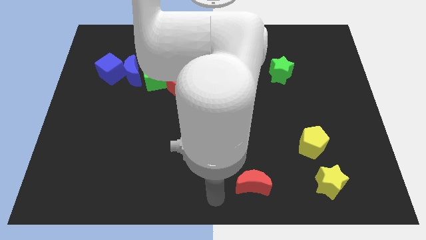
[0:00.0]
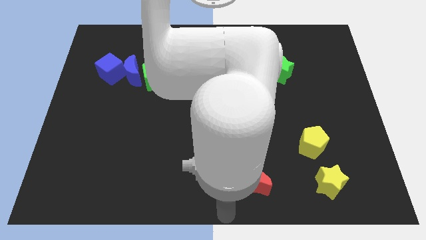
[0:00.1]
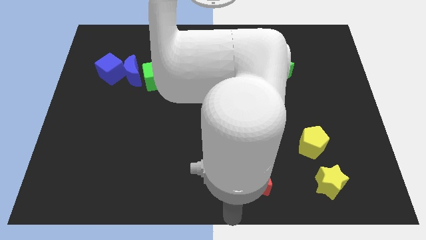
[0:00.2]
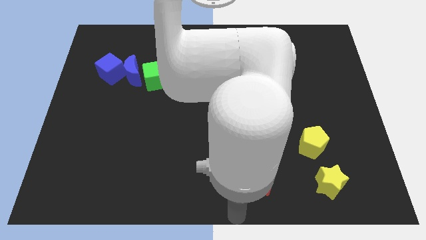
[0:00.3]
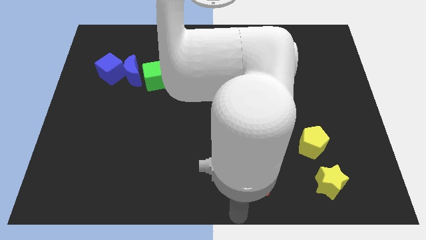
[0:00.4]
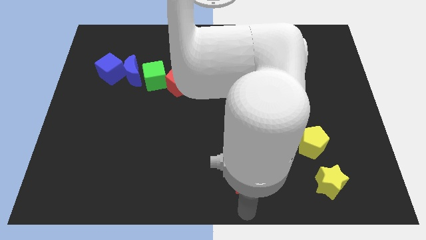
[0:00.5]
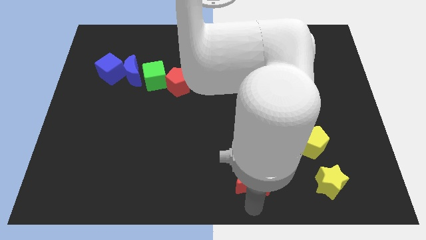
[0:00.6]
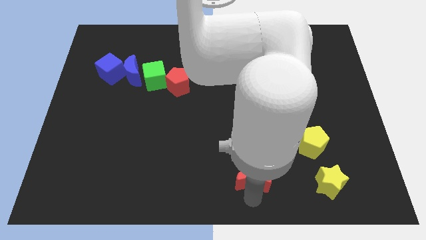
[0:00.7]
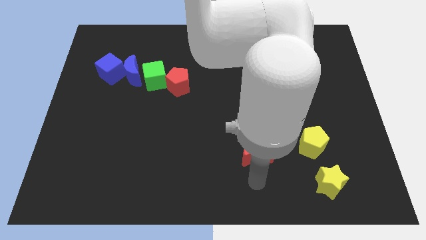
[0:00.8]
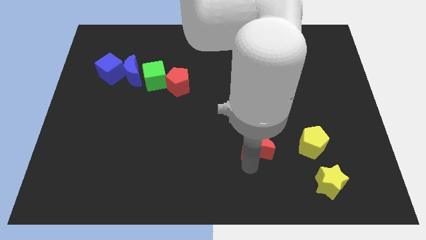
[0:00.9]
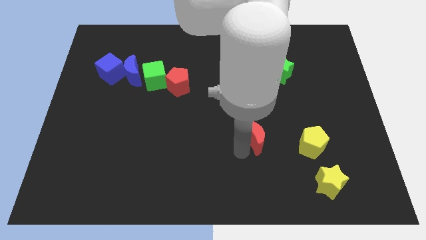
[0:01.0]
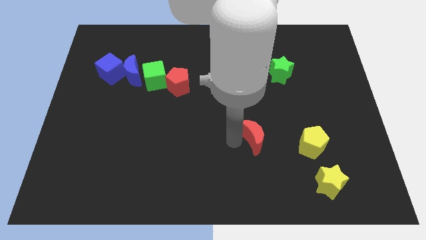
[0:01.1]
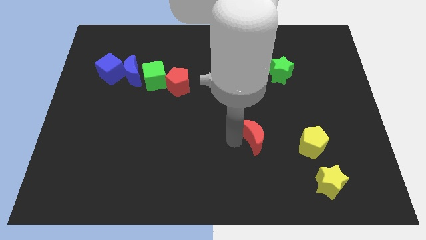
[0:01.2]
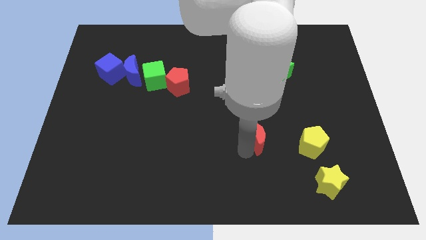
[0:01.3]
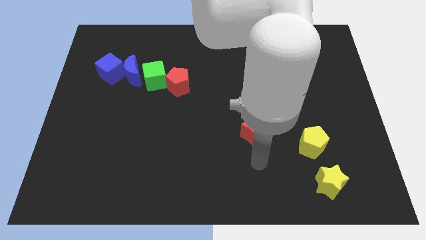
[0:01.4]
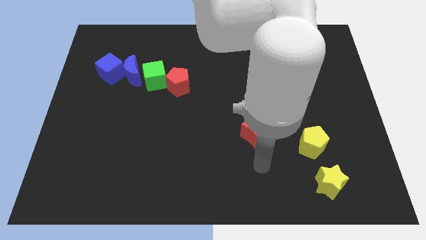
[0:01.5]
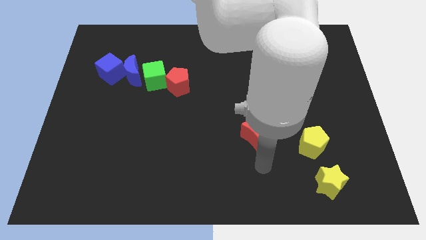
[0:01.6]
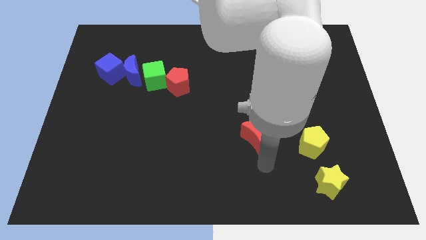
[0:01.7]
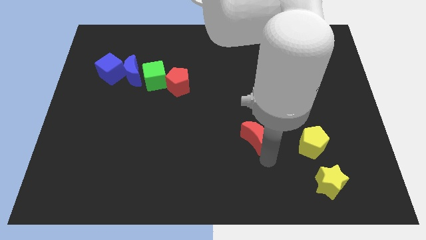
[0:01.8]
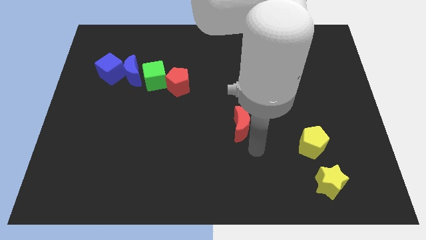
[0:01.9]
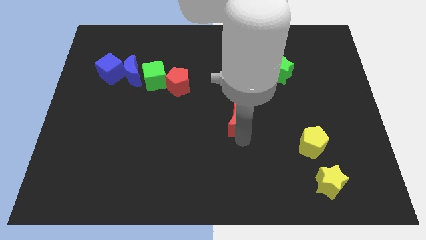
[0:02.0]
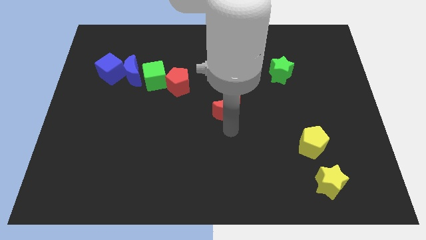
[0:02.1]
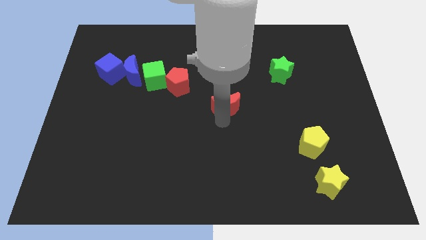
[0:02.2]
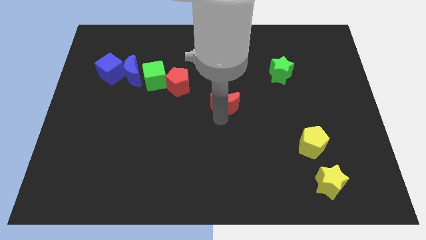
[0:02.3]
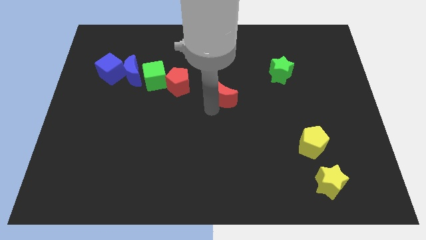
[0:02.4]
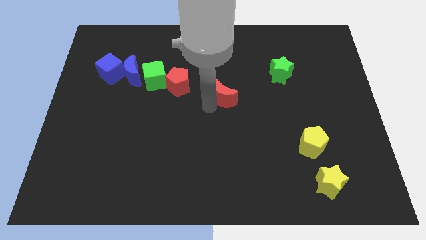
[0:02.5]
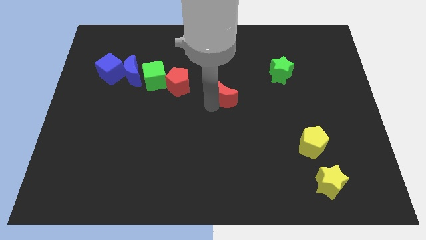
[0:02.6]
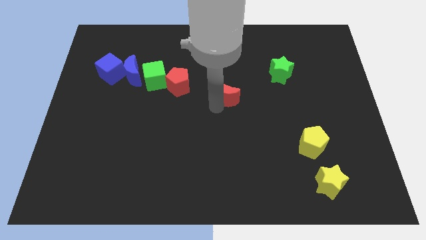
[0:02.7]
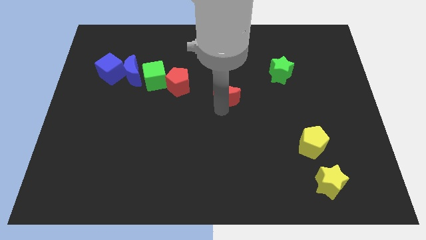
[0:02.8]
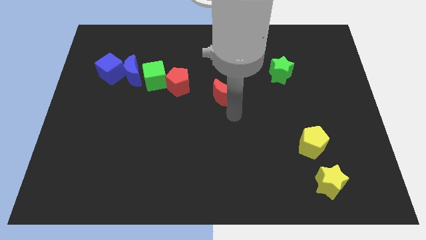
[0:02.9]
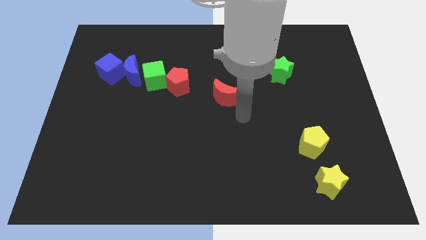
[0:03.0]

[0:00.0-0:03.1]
push the red crescent towards the right of the red pentagon

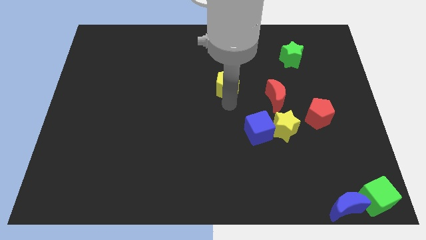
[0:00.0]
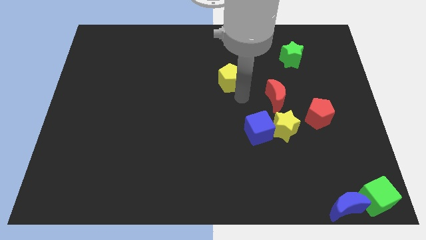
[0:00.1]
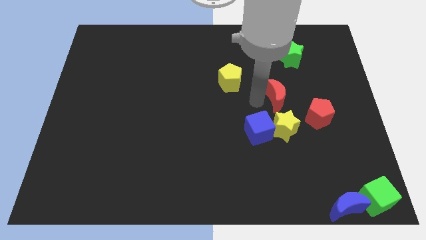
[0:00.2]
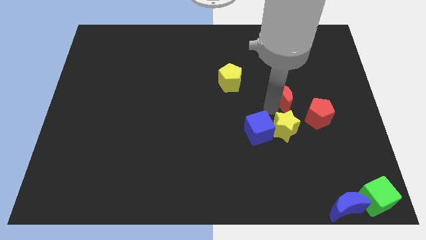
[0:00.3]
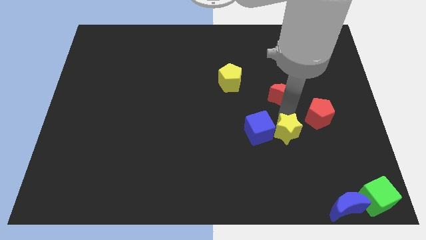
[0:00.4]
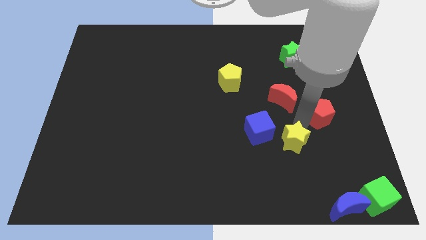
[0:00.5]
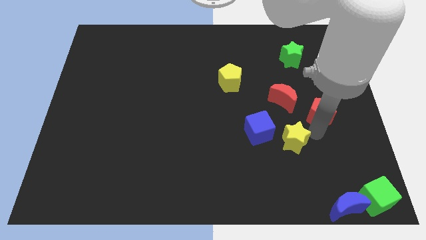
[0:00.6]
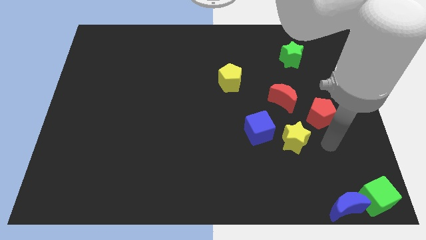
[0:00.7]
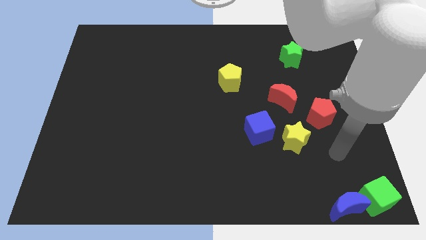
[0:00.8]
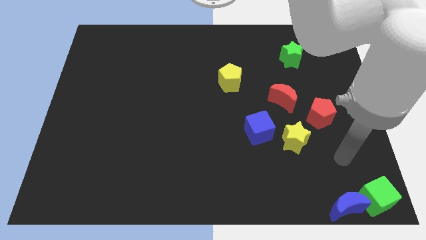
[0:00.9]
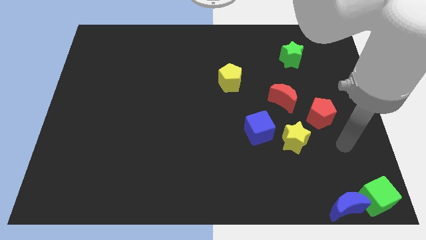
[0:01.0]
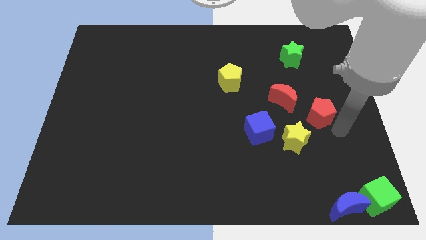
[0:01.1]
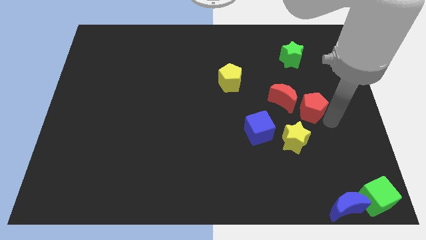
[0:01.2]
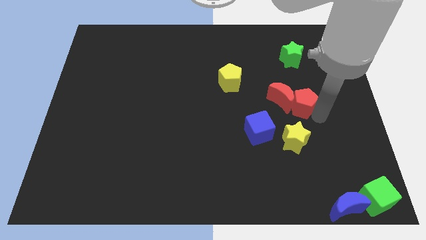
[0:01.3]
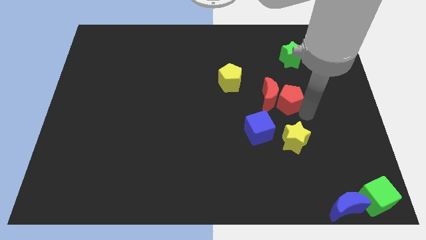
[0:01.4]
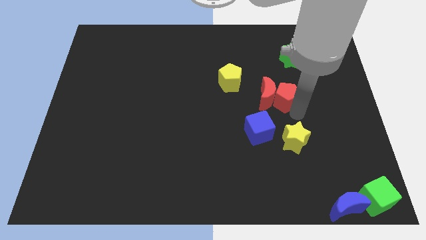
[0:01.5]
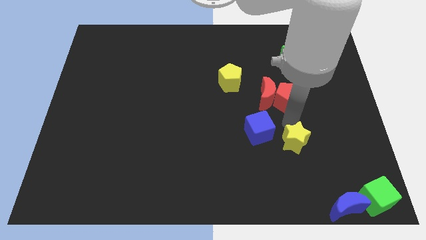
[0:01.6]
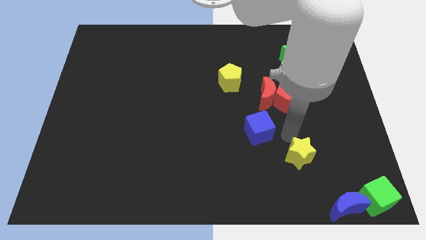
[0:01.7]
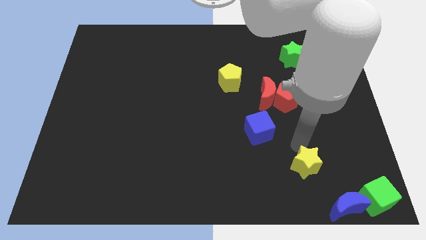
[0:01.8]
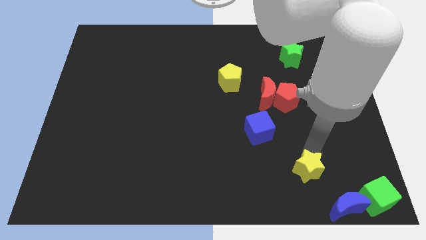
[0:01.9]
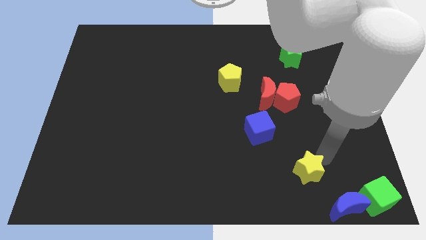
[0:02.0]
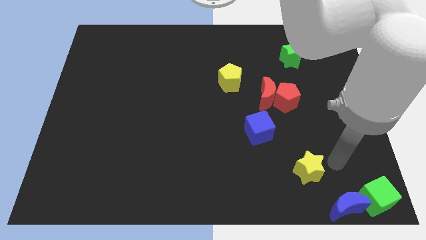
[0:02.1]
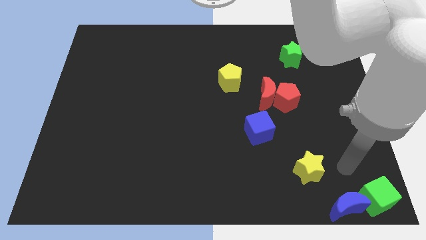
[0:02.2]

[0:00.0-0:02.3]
move the red pentagon into the red crescent

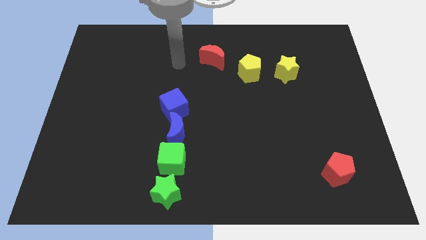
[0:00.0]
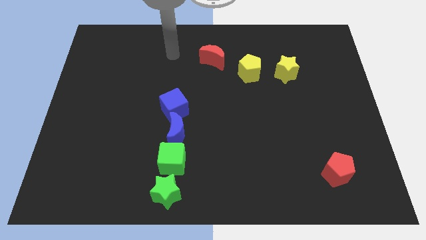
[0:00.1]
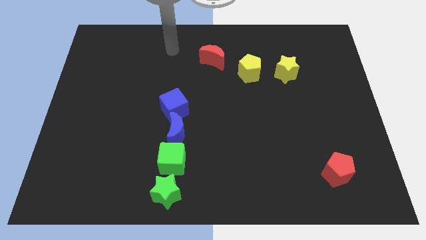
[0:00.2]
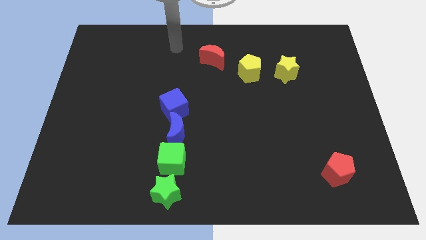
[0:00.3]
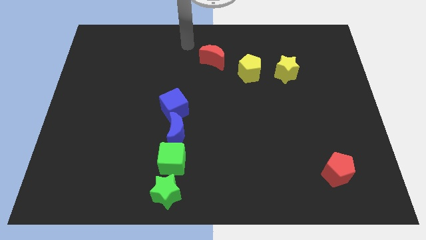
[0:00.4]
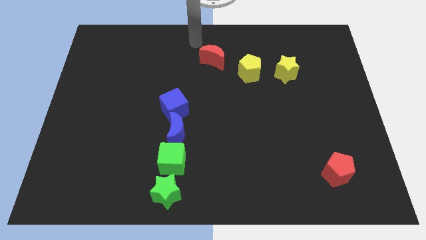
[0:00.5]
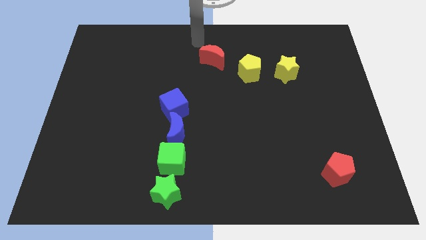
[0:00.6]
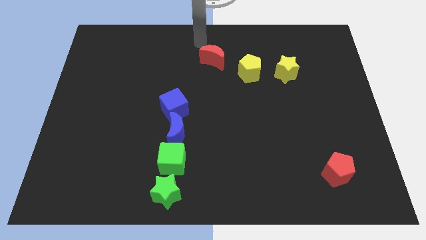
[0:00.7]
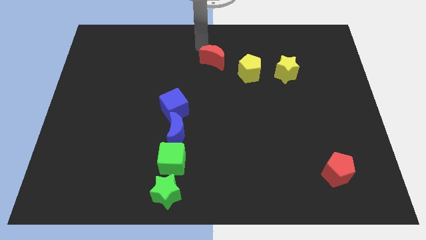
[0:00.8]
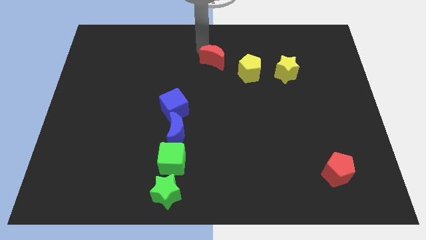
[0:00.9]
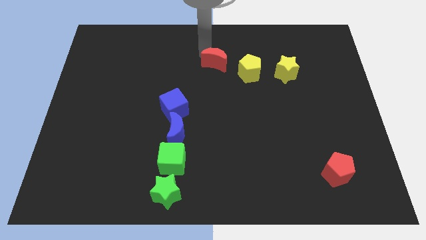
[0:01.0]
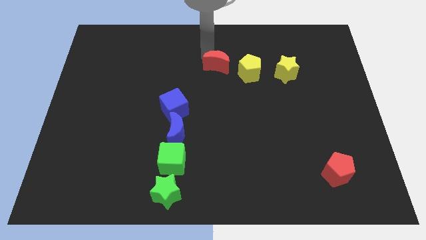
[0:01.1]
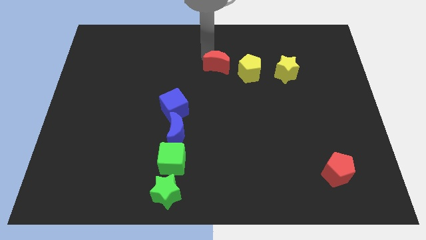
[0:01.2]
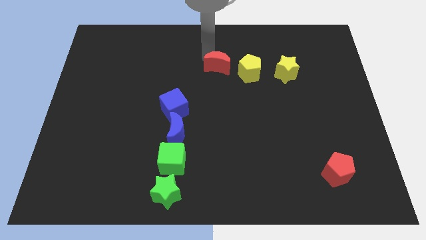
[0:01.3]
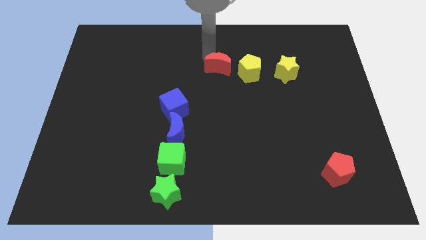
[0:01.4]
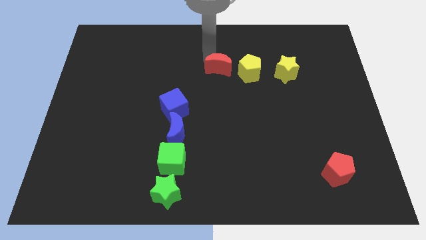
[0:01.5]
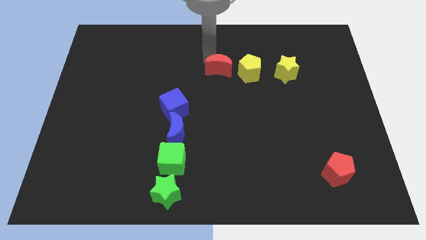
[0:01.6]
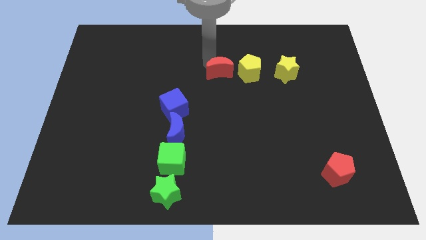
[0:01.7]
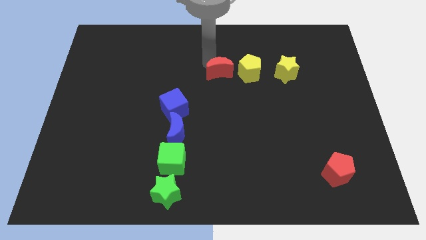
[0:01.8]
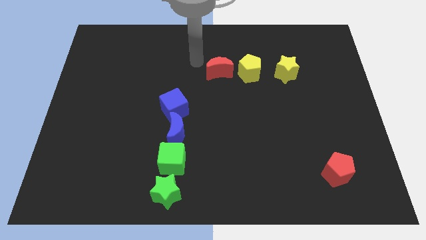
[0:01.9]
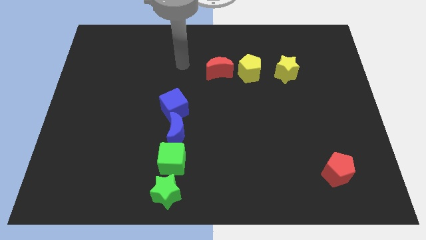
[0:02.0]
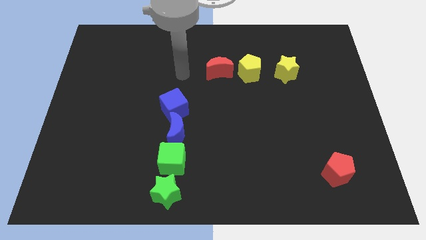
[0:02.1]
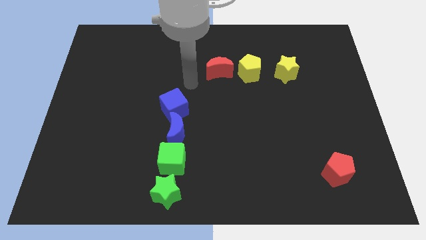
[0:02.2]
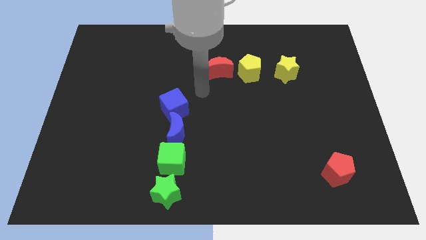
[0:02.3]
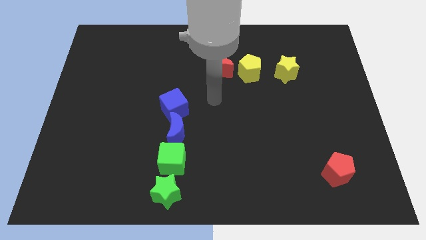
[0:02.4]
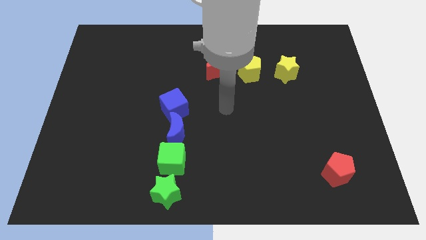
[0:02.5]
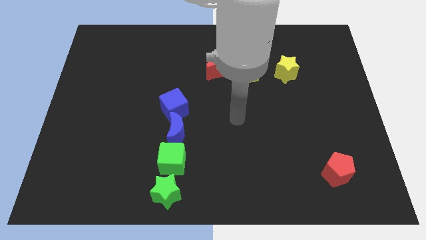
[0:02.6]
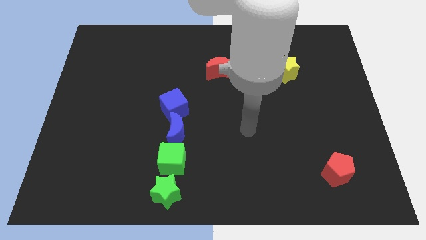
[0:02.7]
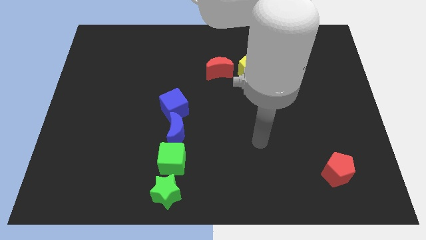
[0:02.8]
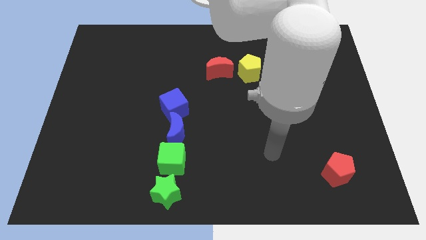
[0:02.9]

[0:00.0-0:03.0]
move the red crescent slightly to the down

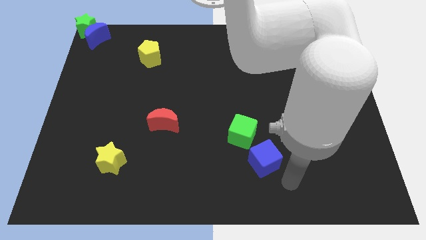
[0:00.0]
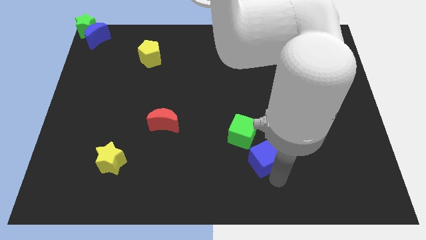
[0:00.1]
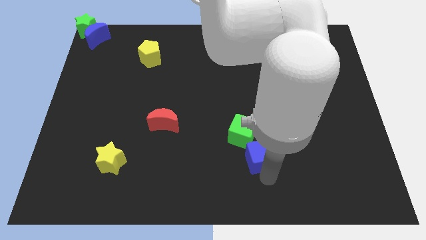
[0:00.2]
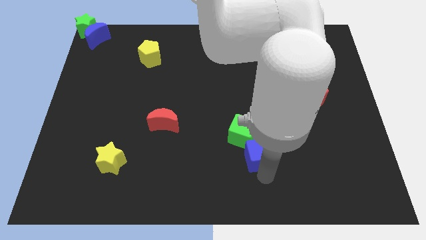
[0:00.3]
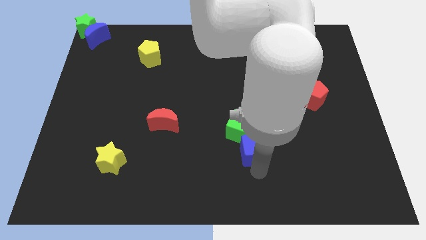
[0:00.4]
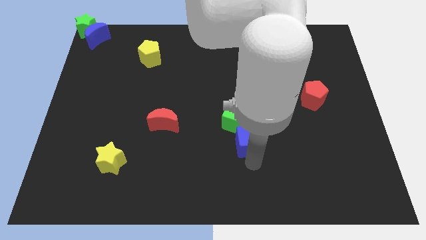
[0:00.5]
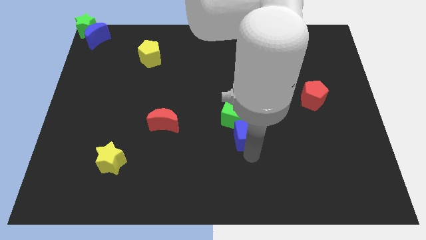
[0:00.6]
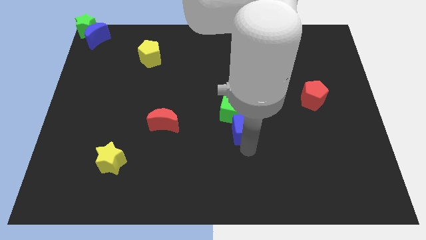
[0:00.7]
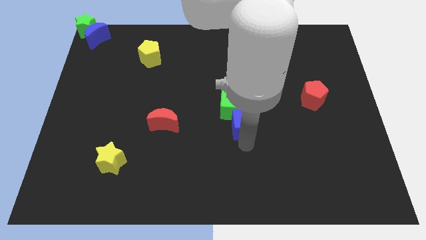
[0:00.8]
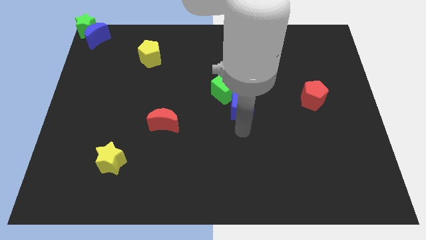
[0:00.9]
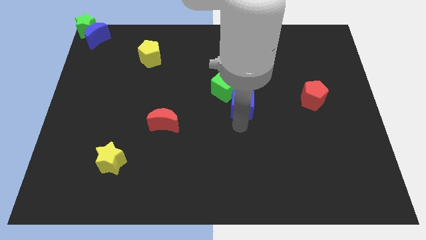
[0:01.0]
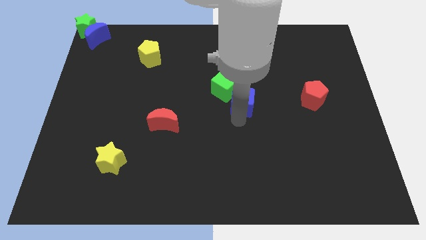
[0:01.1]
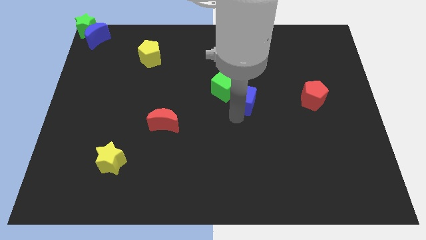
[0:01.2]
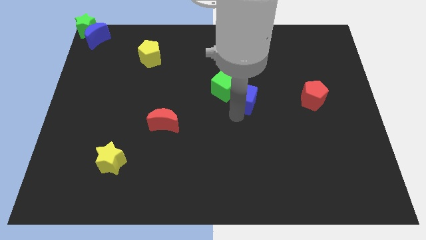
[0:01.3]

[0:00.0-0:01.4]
push the green cube with the blue cube towards the center of the board
